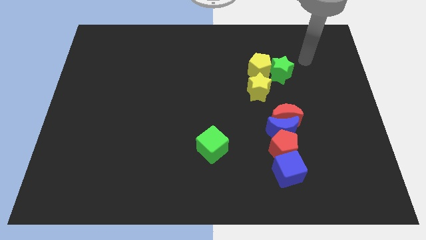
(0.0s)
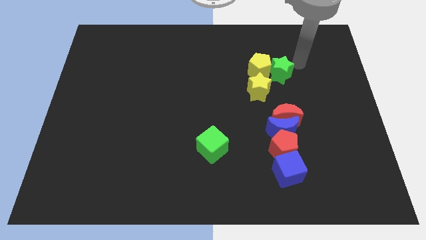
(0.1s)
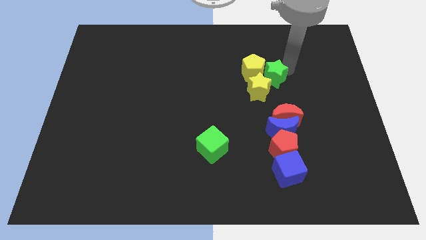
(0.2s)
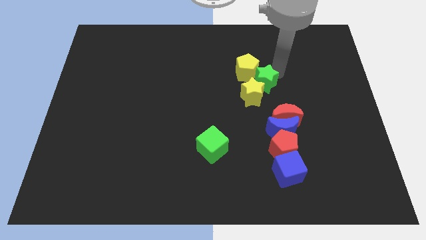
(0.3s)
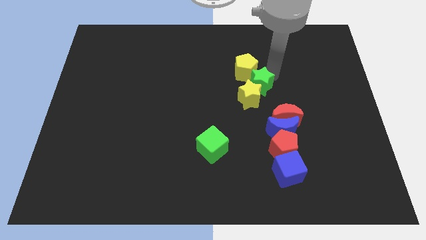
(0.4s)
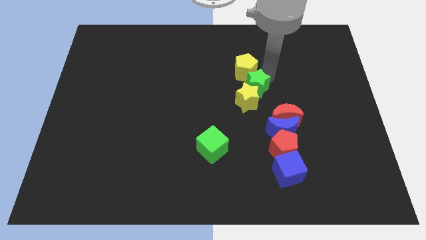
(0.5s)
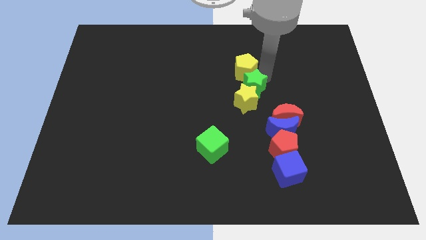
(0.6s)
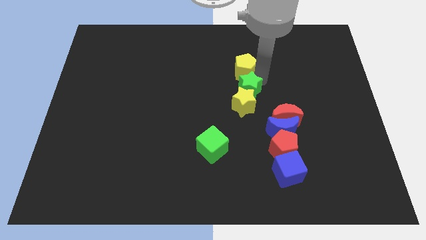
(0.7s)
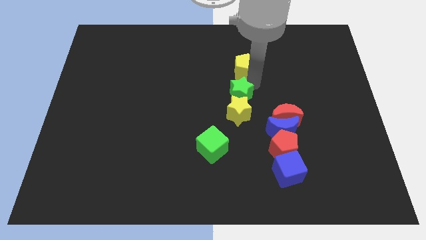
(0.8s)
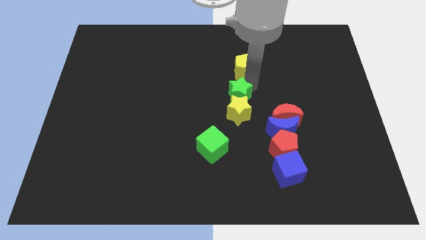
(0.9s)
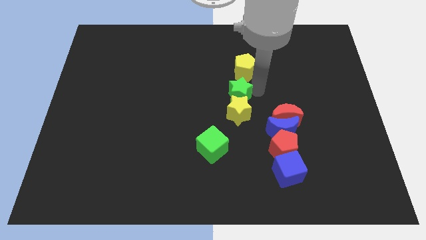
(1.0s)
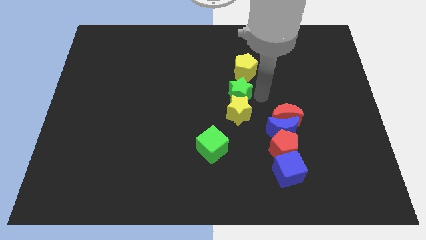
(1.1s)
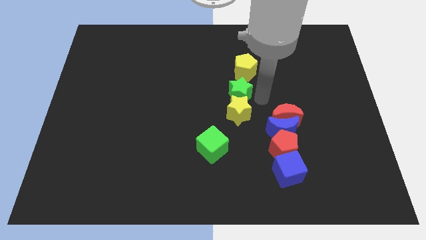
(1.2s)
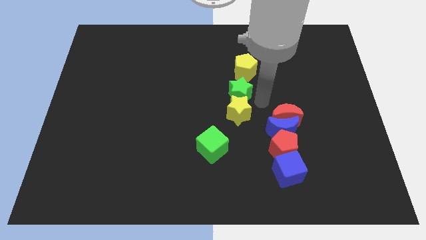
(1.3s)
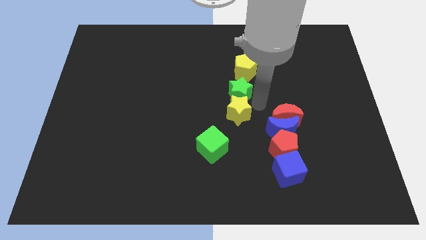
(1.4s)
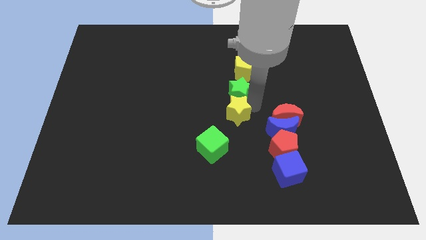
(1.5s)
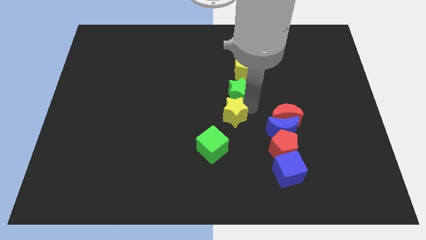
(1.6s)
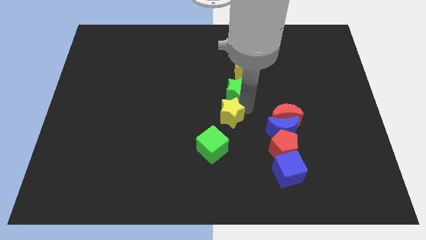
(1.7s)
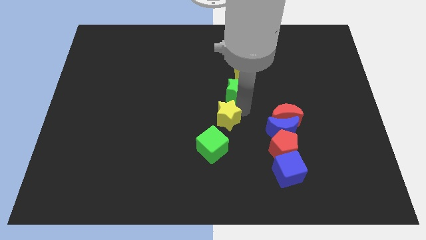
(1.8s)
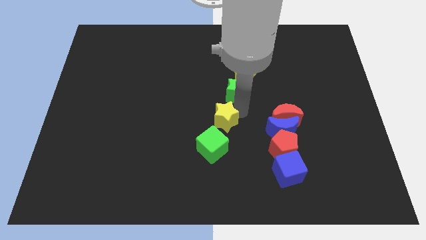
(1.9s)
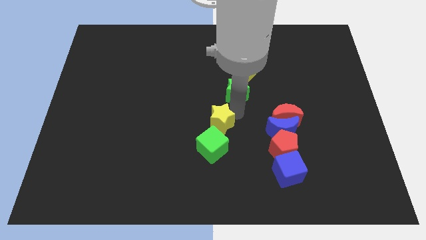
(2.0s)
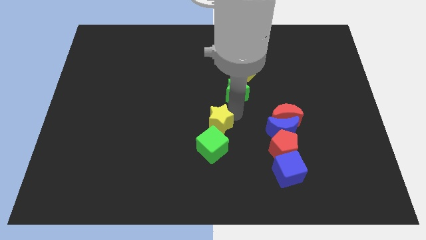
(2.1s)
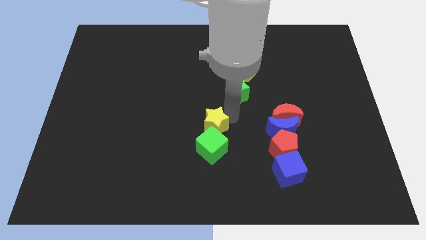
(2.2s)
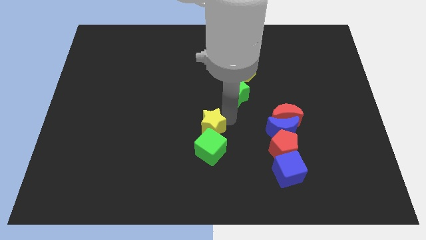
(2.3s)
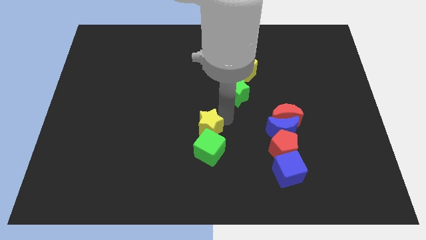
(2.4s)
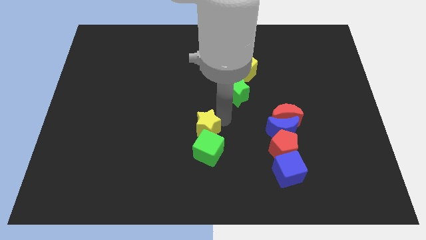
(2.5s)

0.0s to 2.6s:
place yellow star above green cube

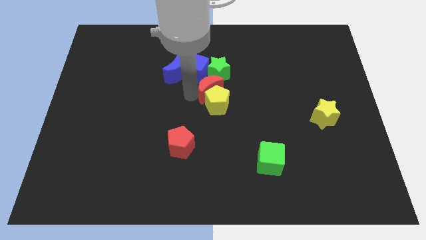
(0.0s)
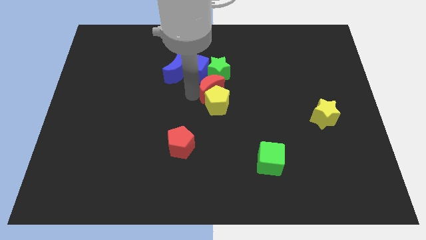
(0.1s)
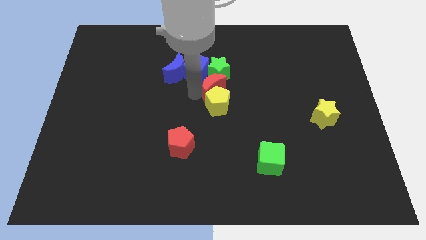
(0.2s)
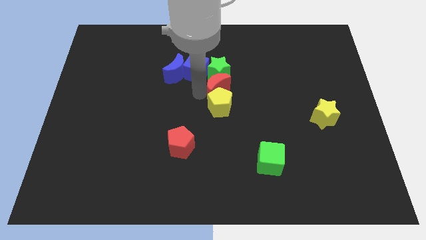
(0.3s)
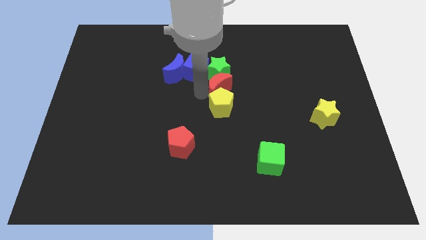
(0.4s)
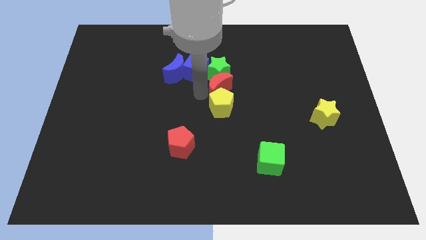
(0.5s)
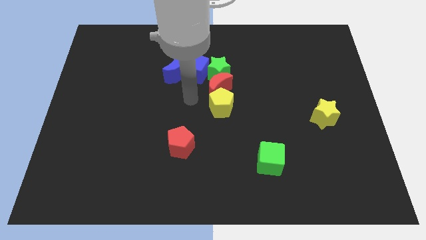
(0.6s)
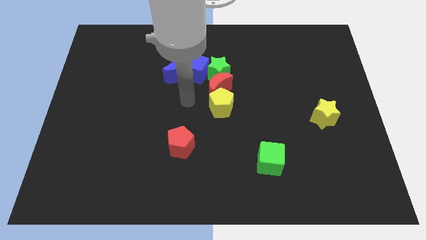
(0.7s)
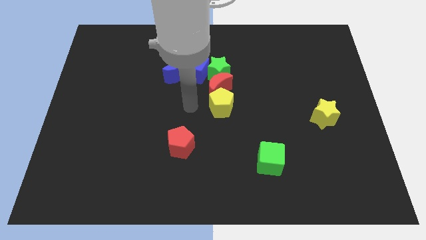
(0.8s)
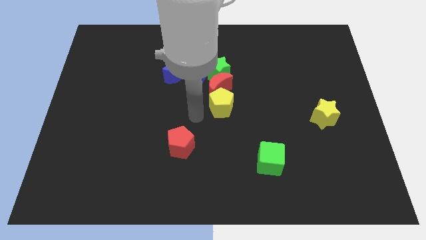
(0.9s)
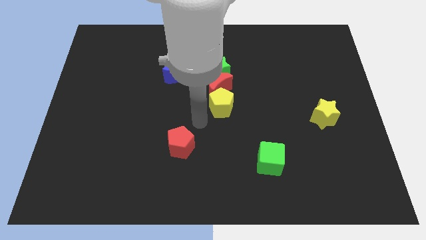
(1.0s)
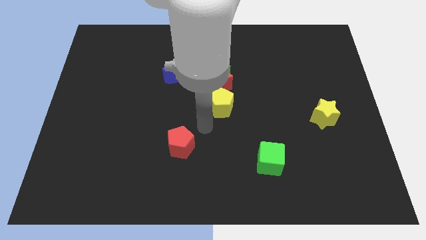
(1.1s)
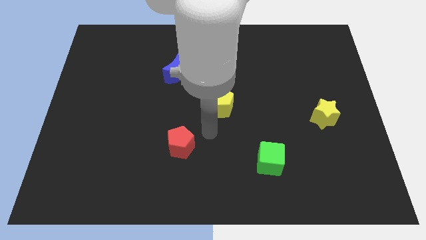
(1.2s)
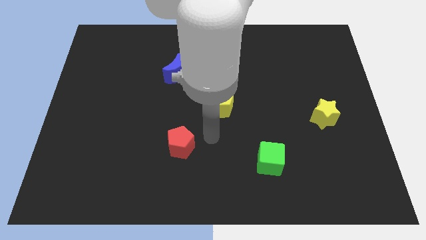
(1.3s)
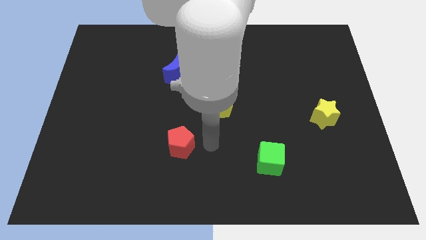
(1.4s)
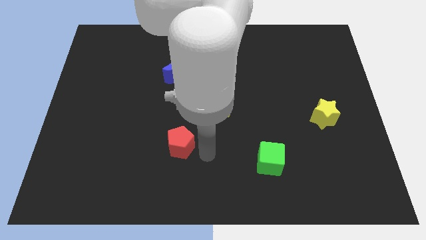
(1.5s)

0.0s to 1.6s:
move the arm away from the red moon

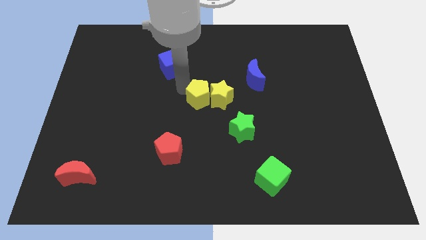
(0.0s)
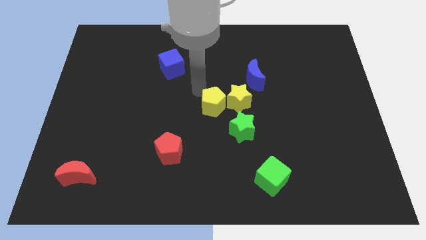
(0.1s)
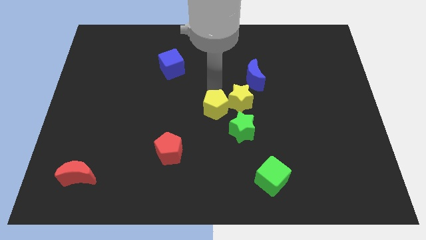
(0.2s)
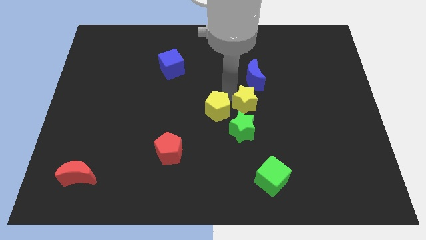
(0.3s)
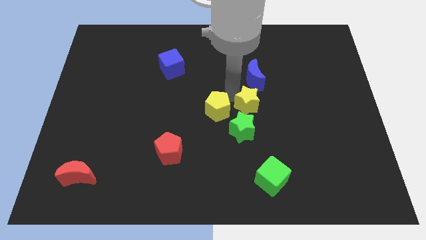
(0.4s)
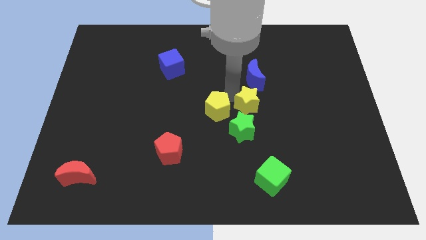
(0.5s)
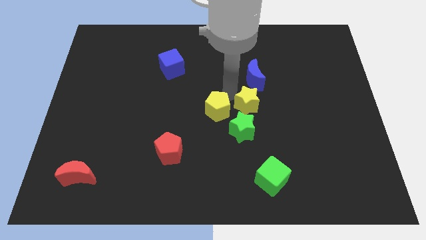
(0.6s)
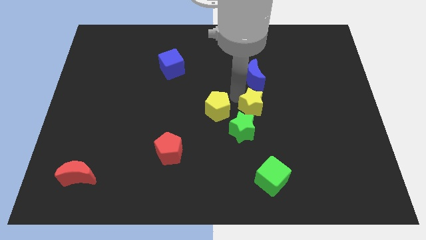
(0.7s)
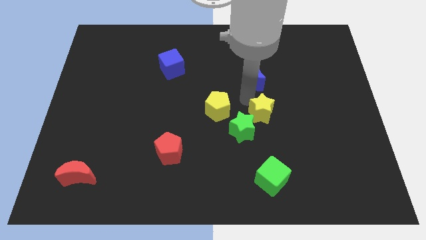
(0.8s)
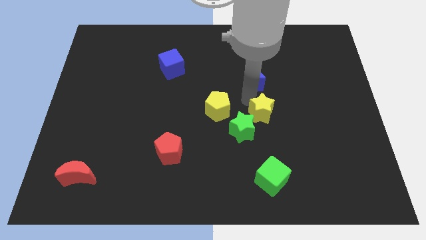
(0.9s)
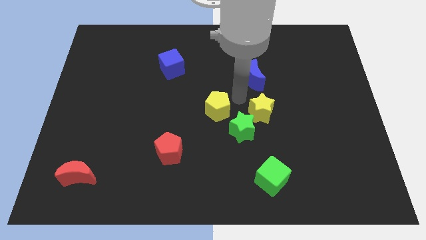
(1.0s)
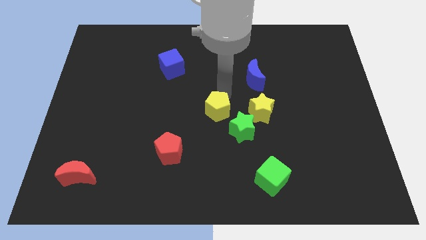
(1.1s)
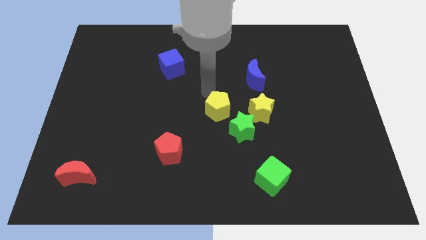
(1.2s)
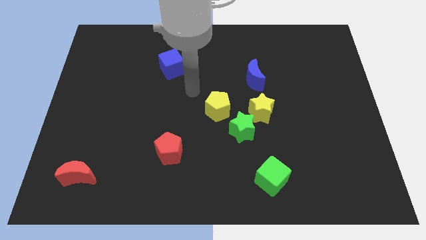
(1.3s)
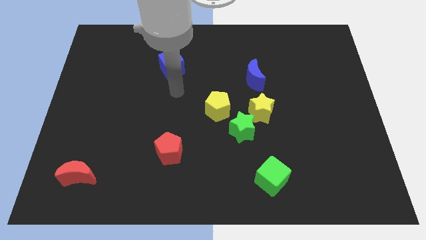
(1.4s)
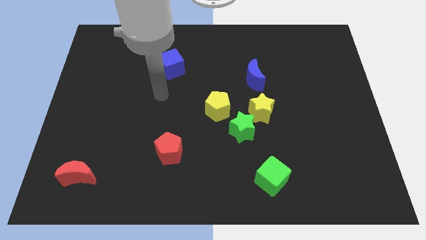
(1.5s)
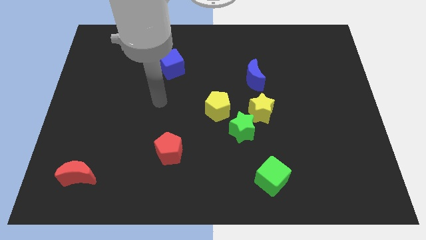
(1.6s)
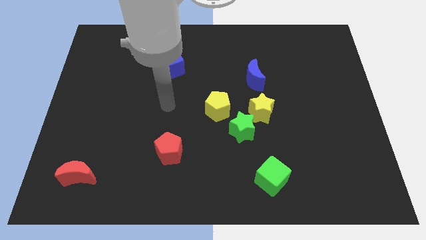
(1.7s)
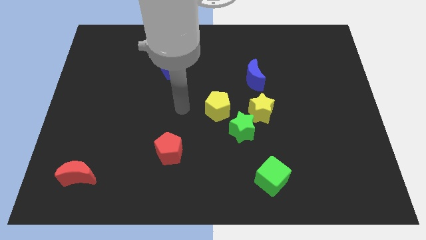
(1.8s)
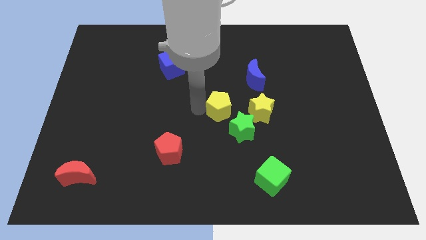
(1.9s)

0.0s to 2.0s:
separate yellow star and yellow pentagon

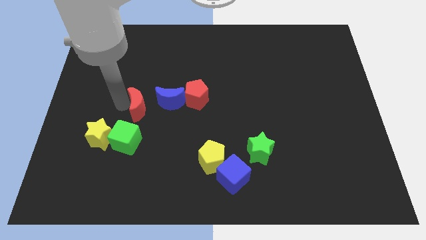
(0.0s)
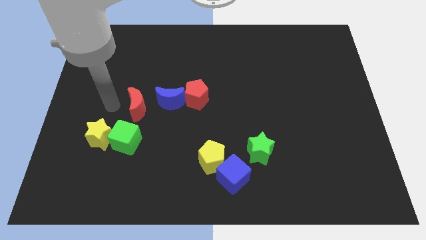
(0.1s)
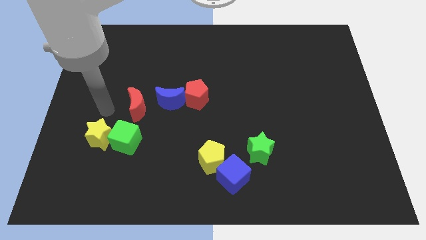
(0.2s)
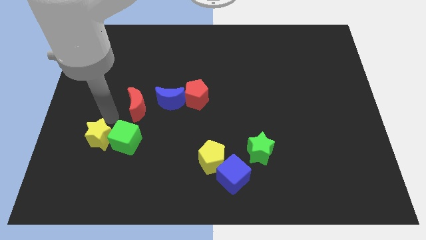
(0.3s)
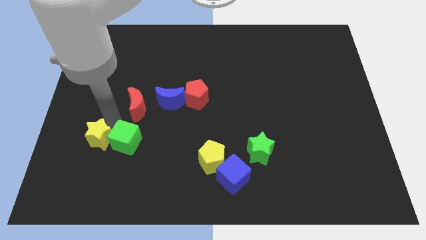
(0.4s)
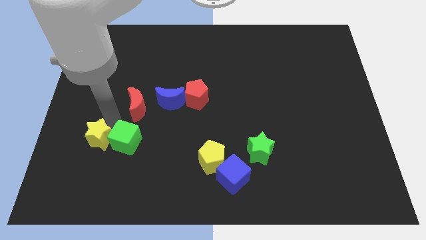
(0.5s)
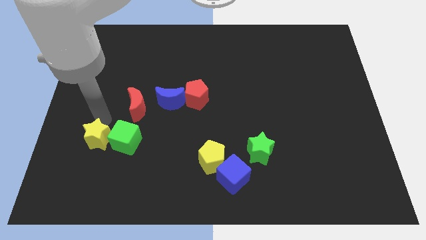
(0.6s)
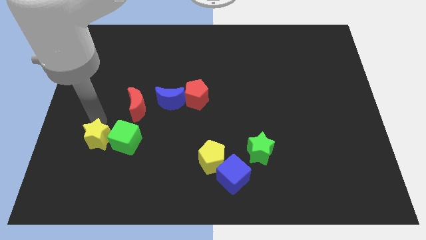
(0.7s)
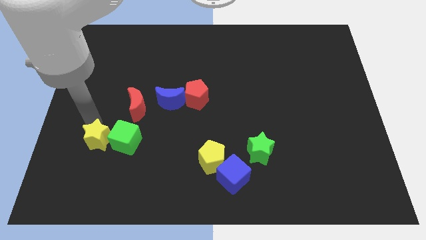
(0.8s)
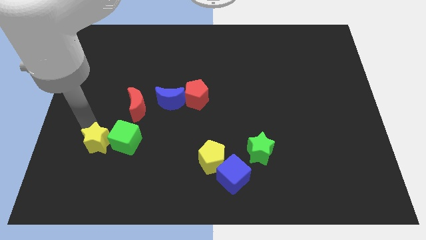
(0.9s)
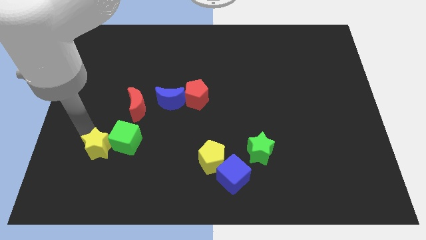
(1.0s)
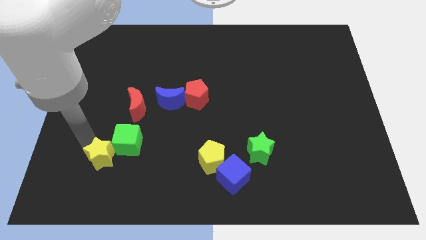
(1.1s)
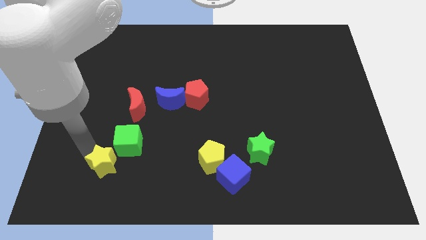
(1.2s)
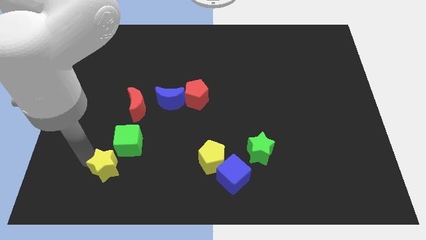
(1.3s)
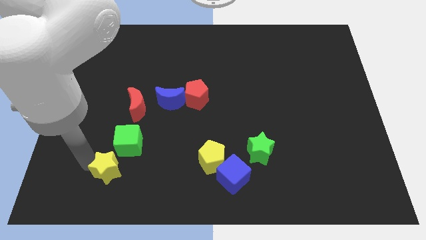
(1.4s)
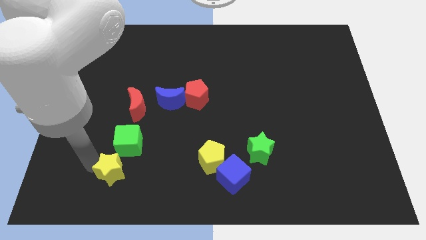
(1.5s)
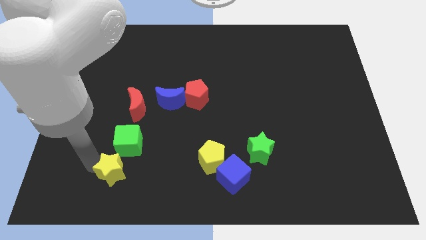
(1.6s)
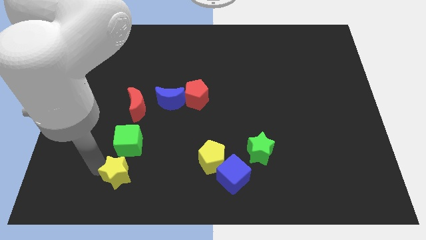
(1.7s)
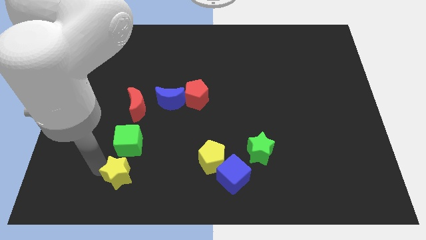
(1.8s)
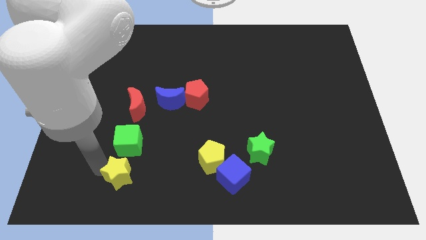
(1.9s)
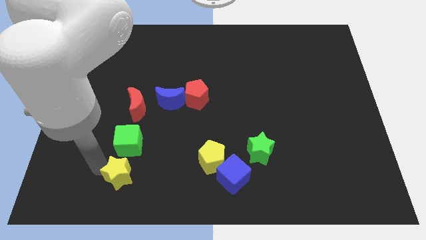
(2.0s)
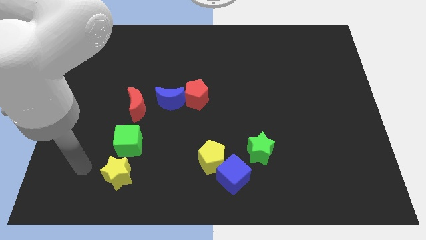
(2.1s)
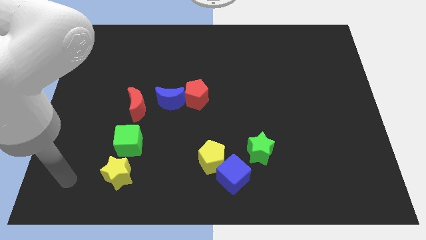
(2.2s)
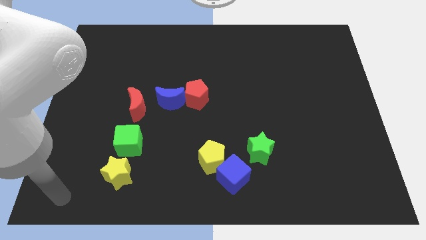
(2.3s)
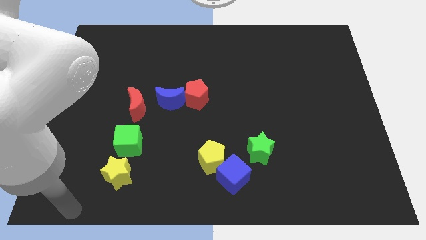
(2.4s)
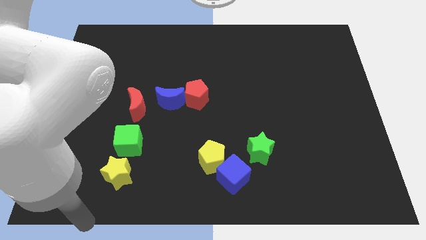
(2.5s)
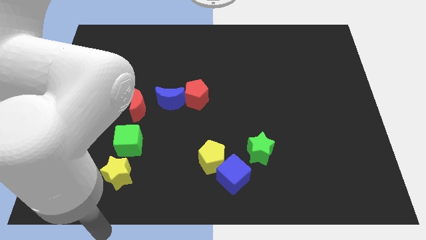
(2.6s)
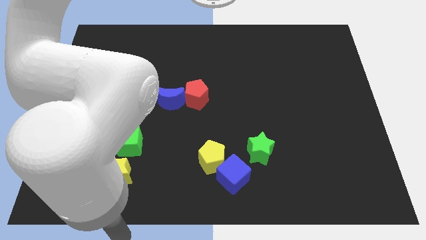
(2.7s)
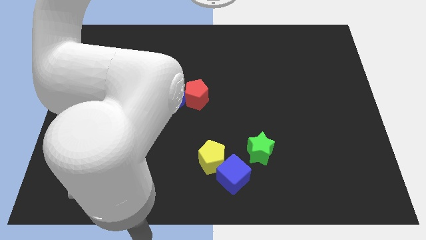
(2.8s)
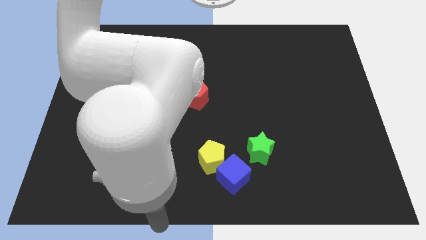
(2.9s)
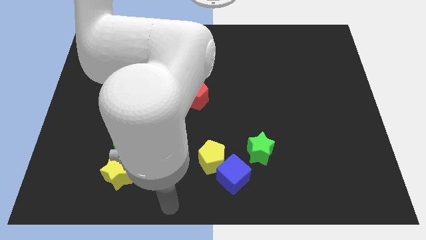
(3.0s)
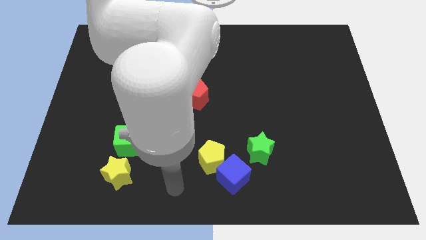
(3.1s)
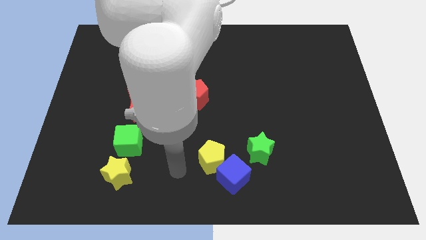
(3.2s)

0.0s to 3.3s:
slide the yellow star to the bottom left side of the green cube
